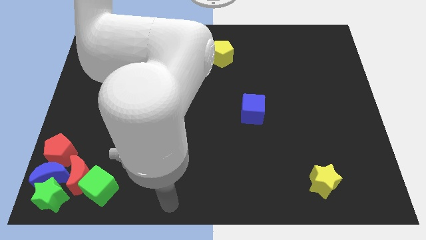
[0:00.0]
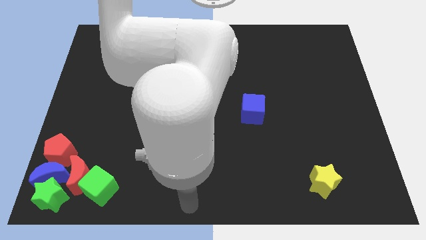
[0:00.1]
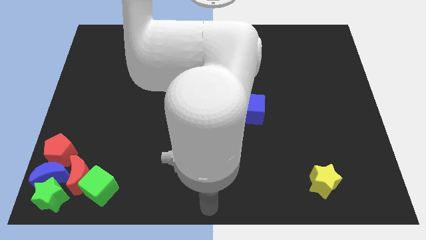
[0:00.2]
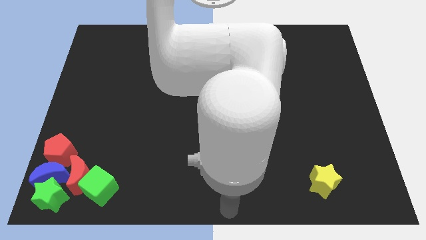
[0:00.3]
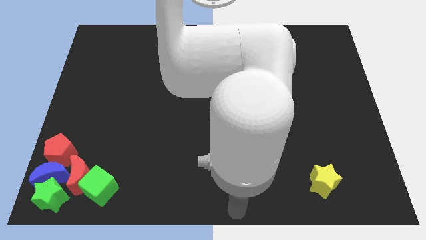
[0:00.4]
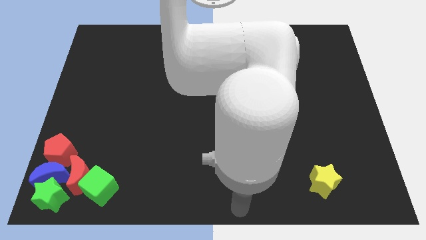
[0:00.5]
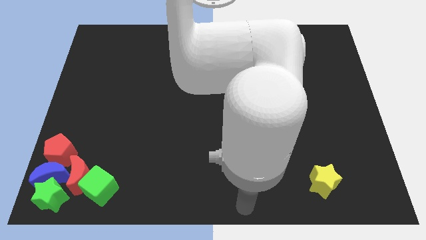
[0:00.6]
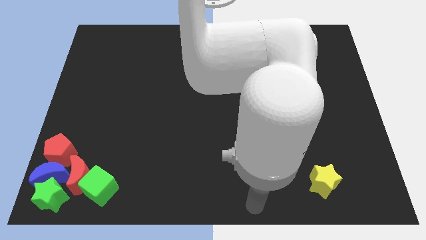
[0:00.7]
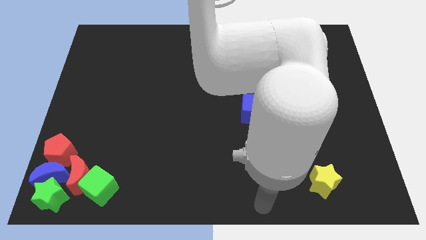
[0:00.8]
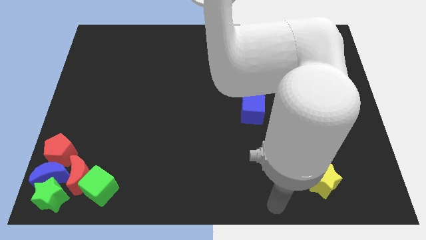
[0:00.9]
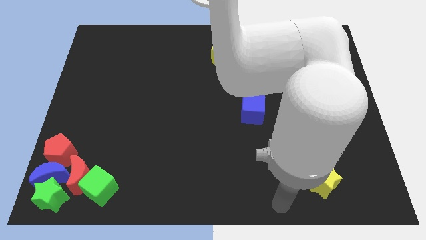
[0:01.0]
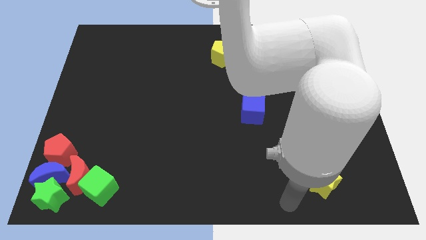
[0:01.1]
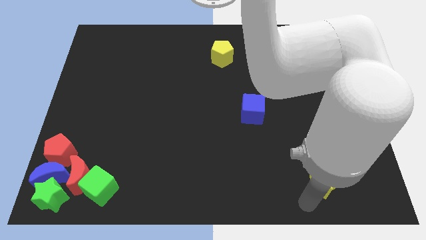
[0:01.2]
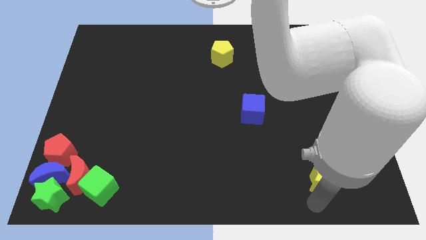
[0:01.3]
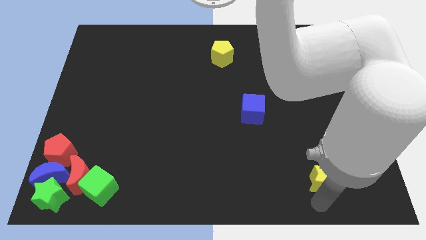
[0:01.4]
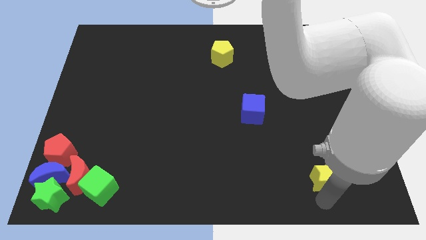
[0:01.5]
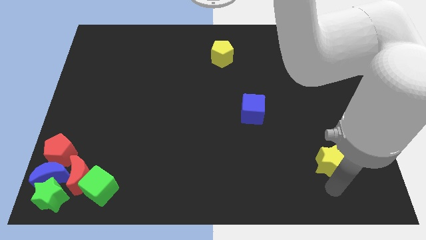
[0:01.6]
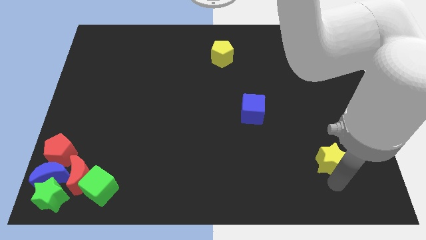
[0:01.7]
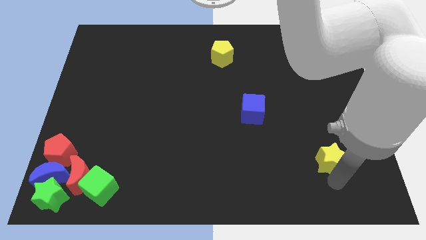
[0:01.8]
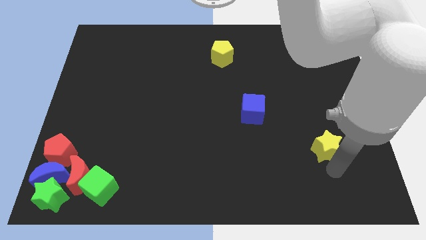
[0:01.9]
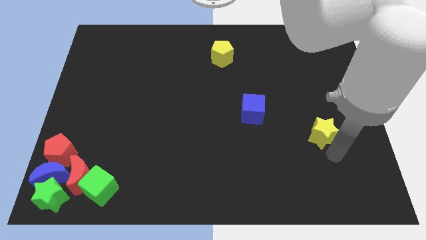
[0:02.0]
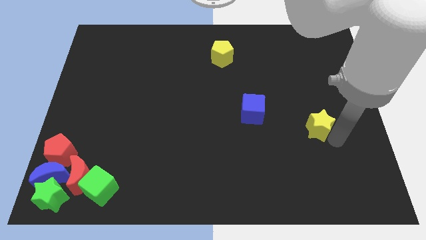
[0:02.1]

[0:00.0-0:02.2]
push the yellow star towards up

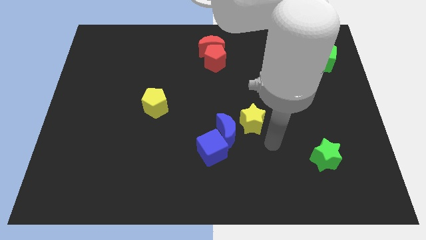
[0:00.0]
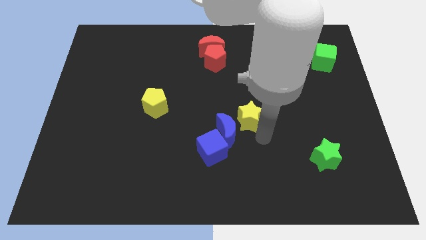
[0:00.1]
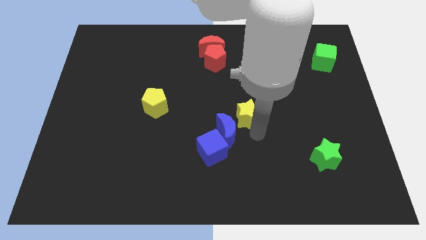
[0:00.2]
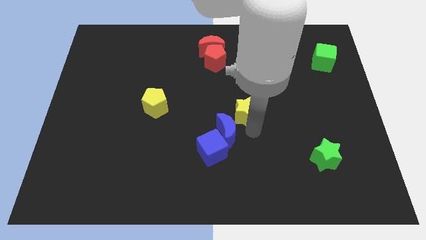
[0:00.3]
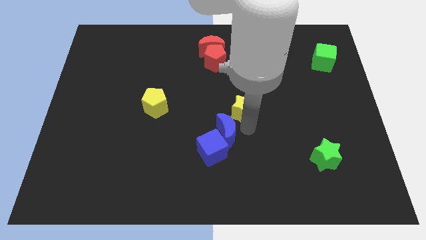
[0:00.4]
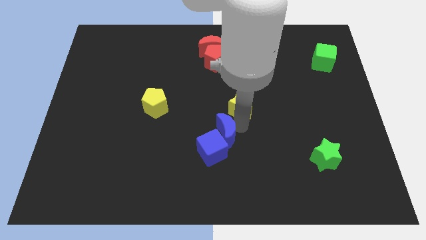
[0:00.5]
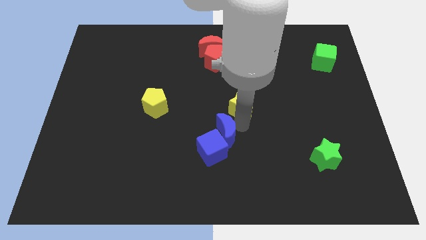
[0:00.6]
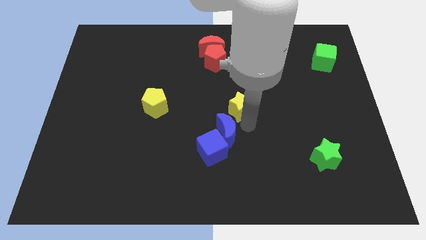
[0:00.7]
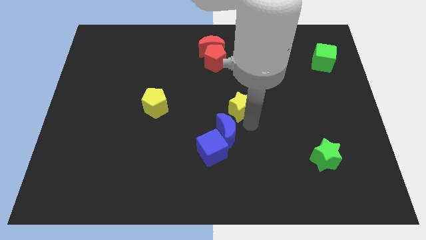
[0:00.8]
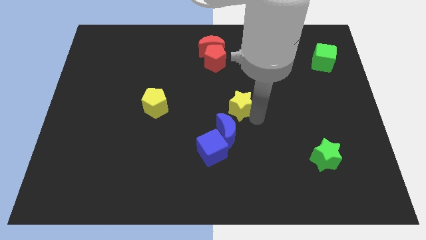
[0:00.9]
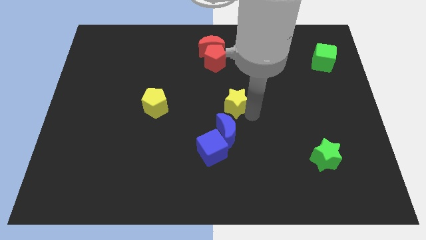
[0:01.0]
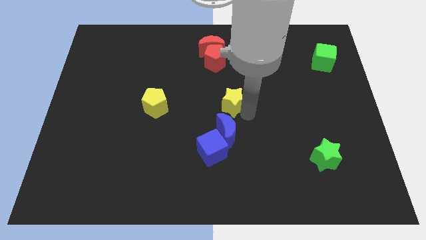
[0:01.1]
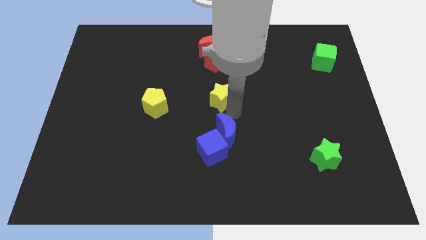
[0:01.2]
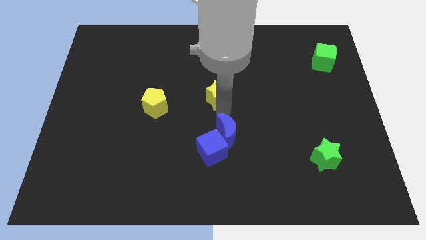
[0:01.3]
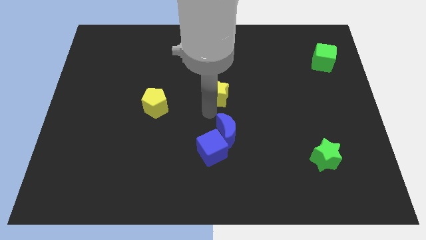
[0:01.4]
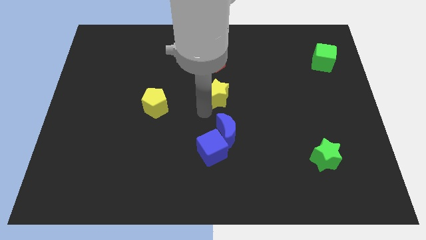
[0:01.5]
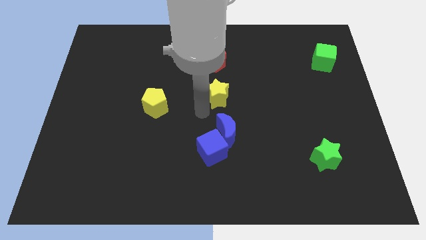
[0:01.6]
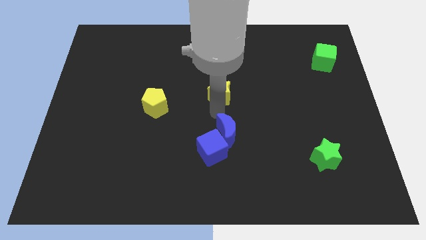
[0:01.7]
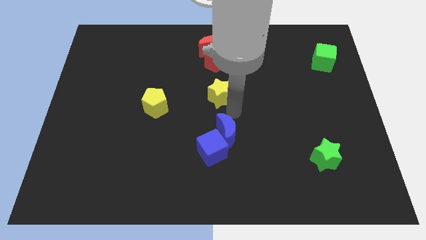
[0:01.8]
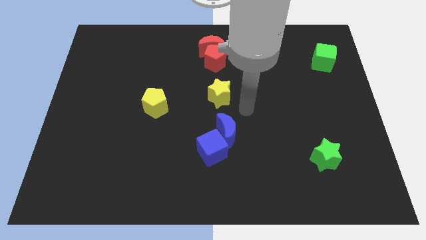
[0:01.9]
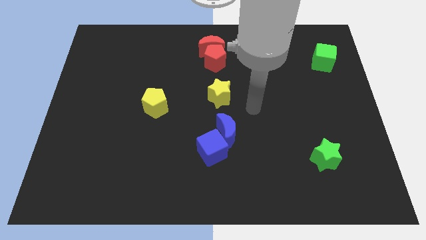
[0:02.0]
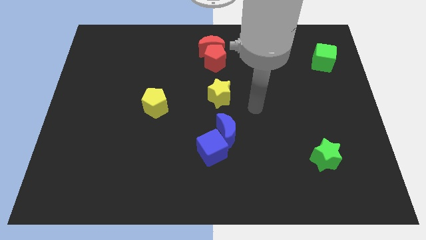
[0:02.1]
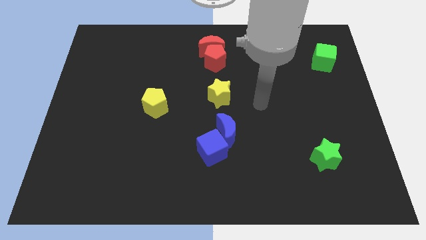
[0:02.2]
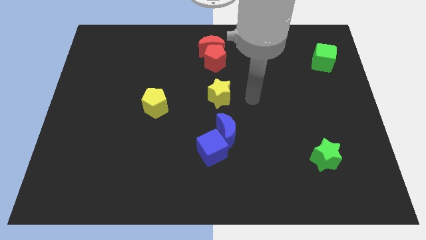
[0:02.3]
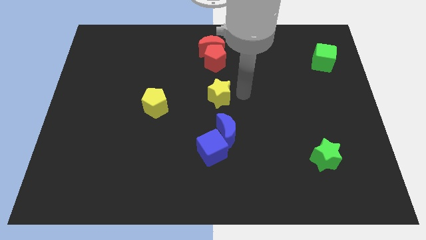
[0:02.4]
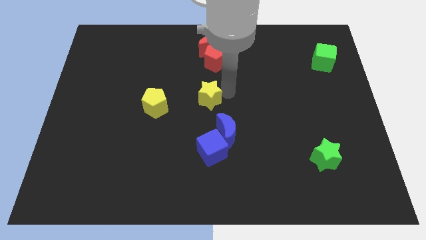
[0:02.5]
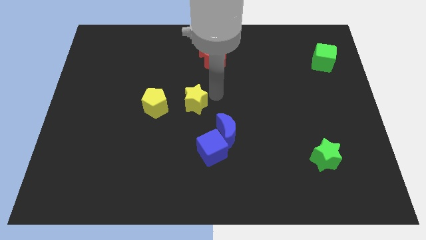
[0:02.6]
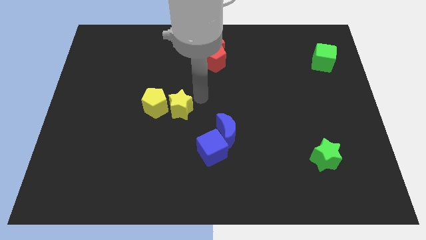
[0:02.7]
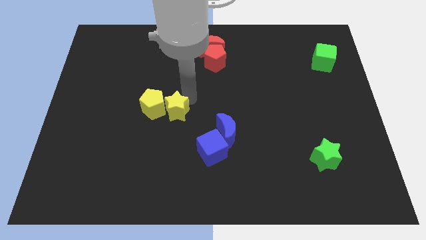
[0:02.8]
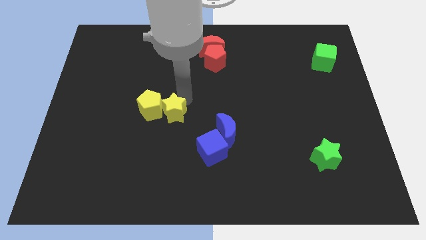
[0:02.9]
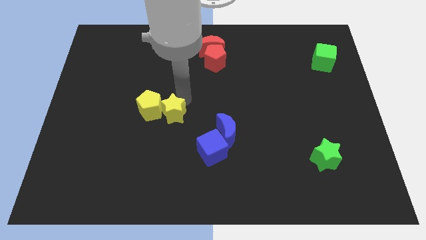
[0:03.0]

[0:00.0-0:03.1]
place yellow star to the right of yellow pentagon

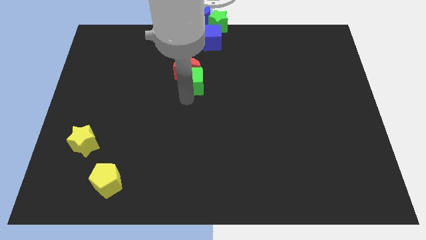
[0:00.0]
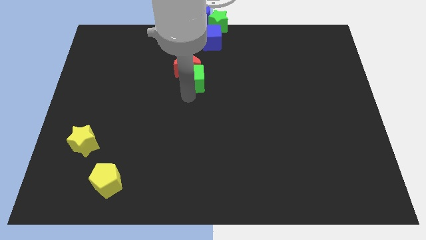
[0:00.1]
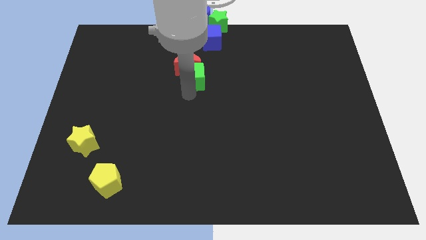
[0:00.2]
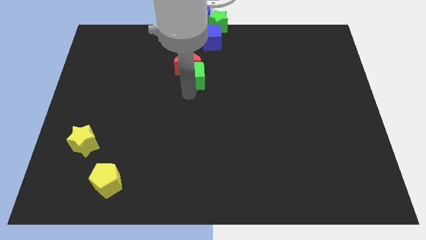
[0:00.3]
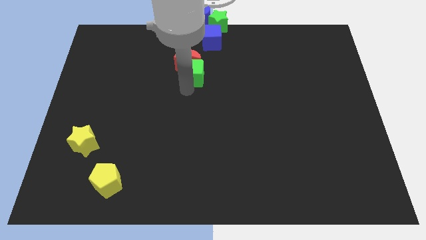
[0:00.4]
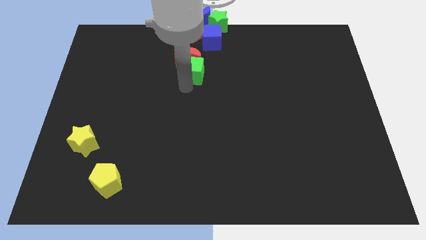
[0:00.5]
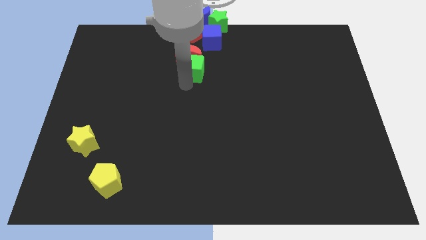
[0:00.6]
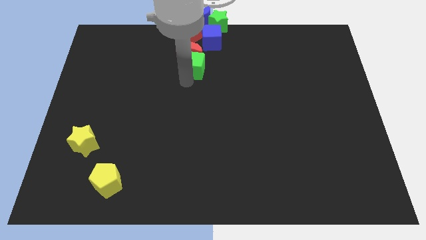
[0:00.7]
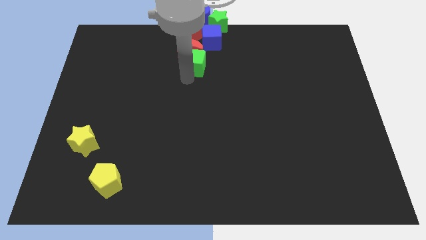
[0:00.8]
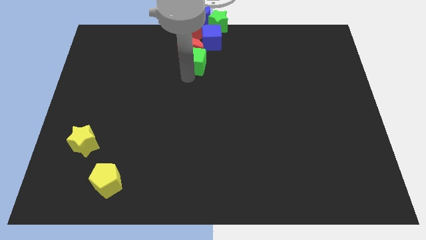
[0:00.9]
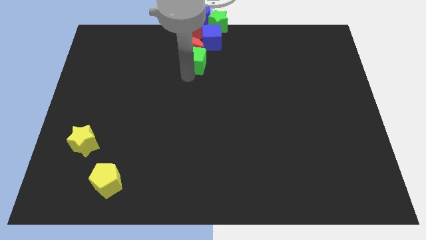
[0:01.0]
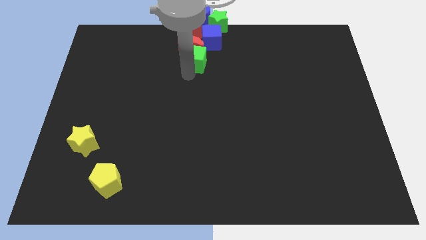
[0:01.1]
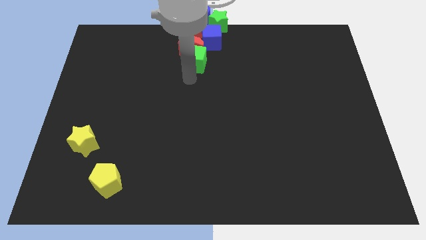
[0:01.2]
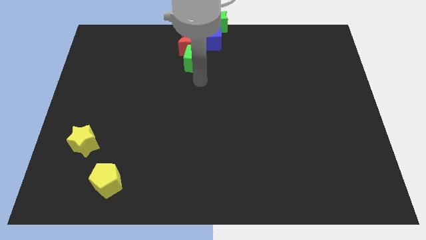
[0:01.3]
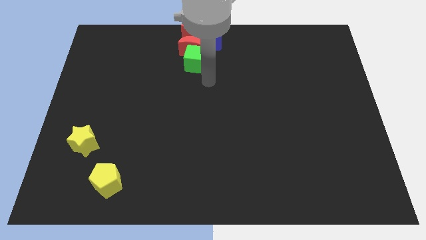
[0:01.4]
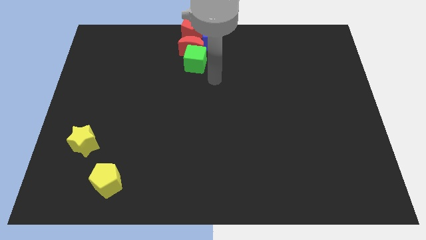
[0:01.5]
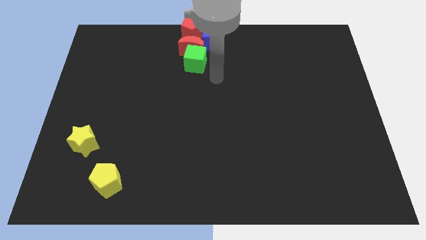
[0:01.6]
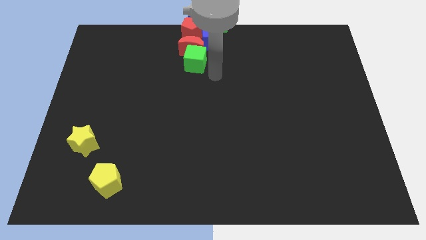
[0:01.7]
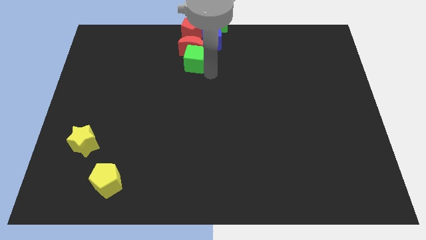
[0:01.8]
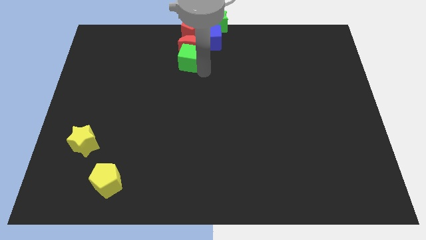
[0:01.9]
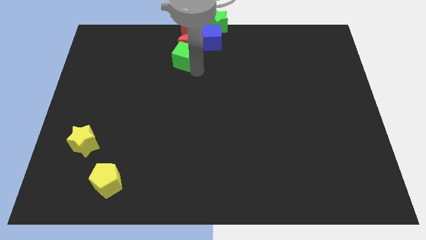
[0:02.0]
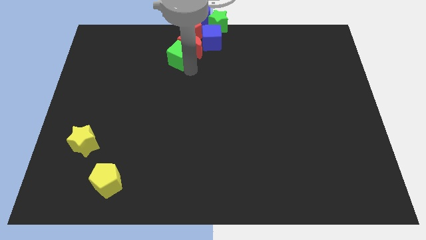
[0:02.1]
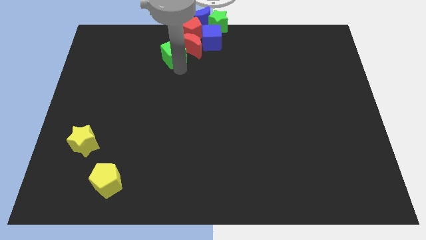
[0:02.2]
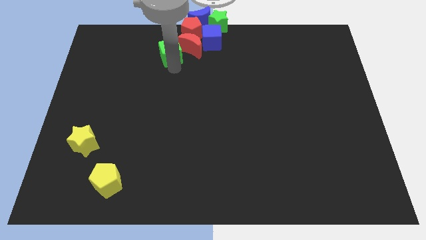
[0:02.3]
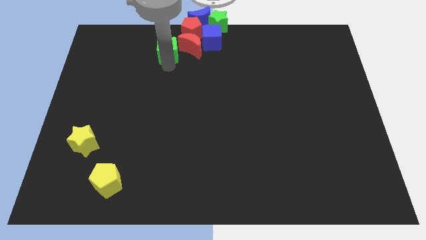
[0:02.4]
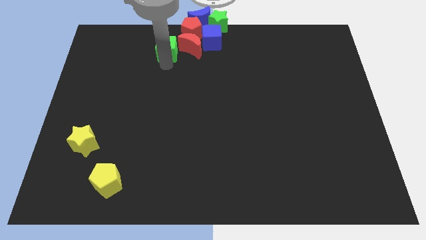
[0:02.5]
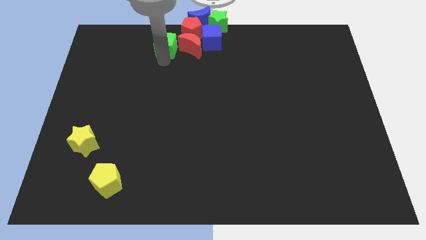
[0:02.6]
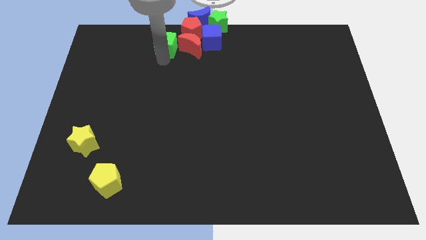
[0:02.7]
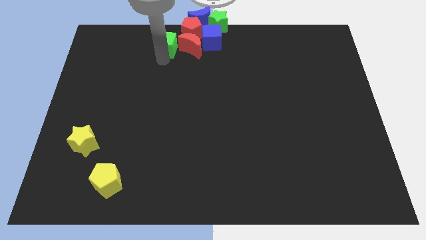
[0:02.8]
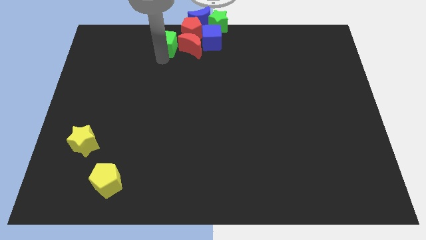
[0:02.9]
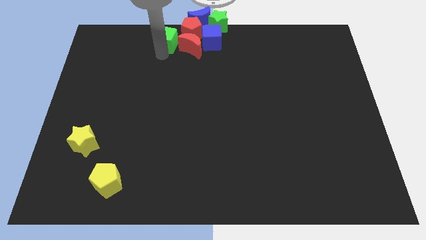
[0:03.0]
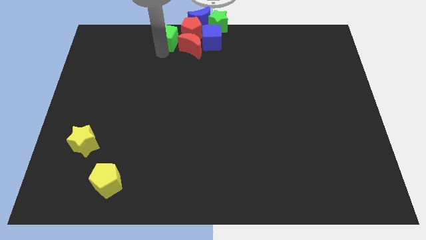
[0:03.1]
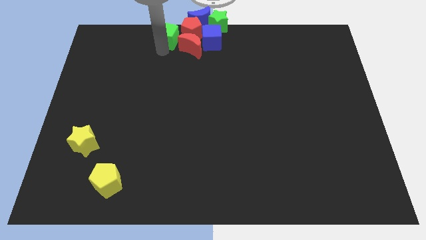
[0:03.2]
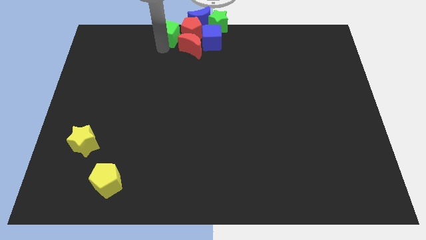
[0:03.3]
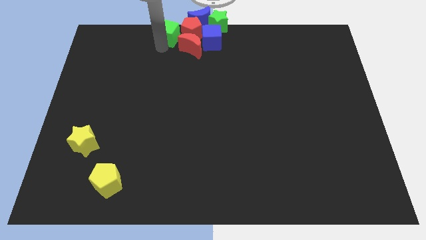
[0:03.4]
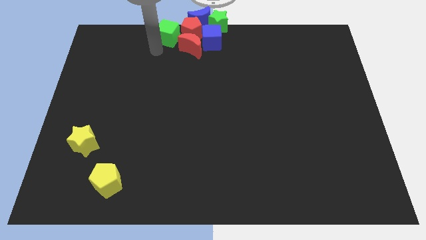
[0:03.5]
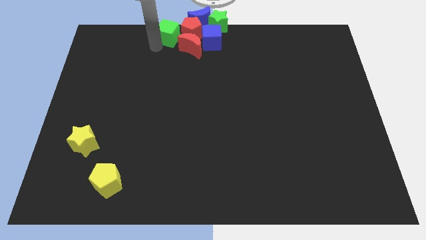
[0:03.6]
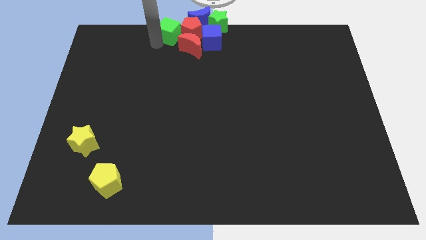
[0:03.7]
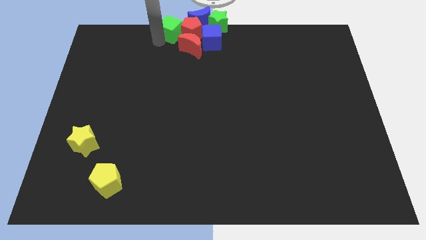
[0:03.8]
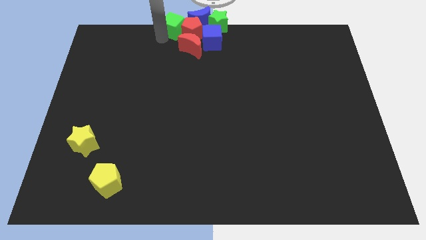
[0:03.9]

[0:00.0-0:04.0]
place the green cube left to the red pentagon
